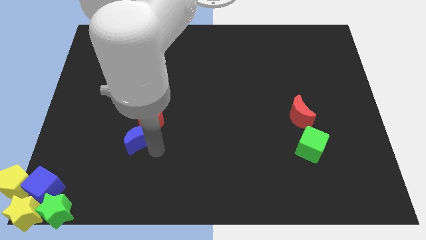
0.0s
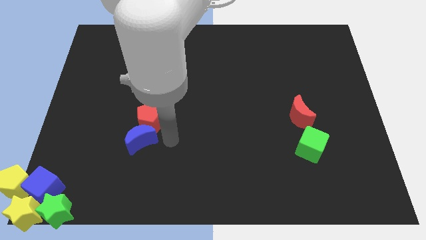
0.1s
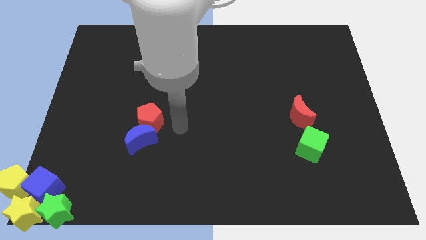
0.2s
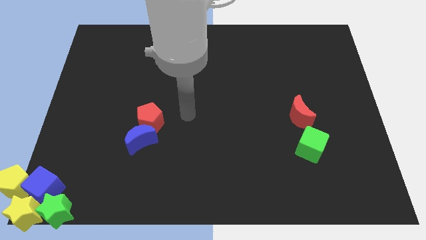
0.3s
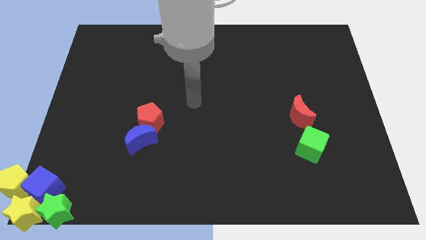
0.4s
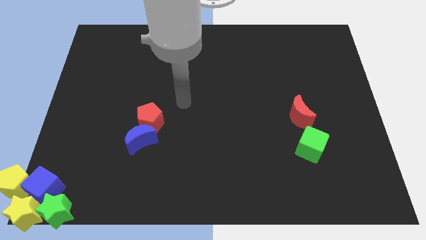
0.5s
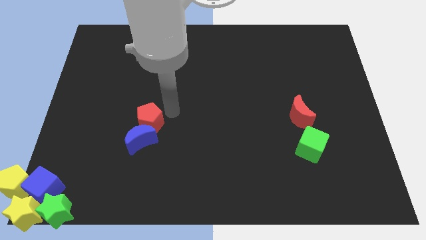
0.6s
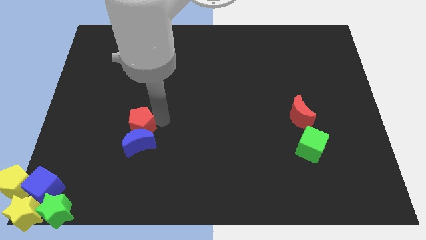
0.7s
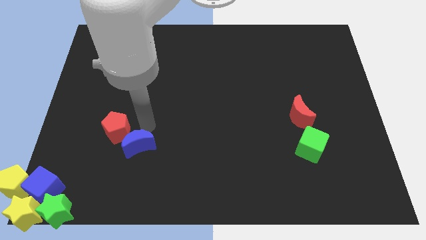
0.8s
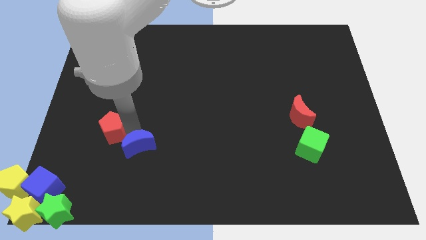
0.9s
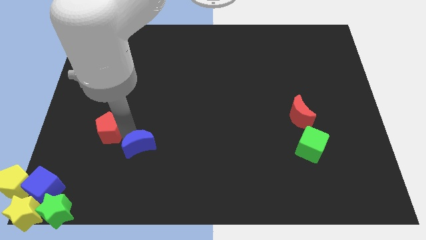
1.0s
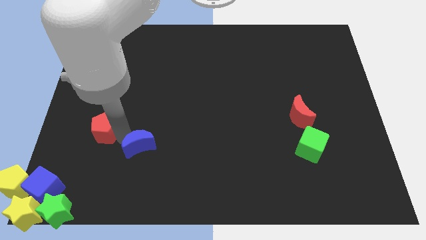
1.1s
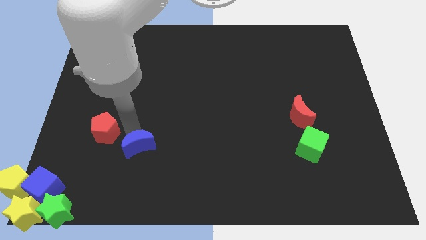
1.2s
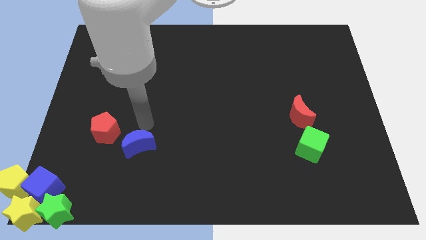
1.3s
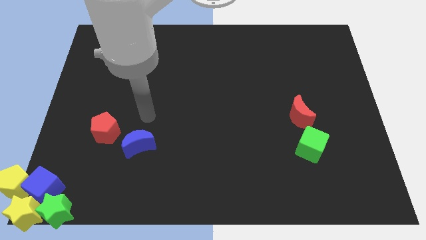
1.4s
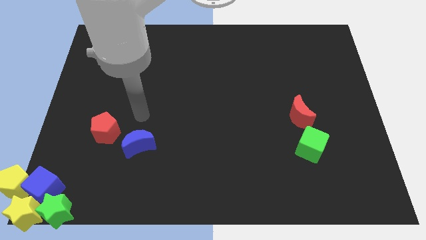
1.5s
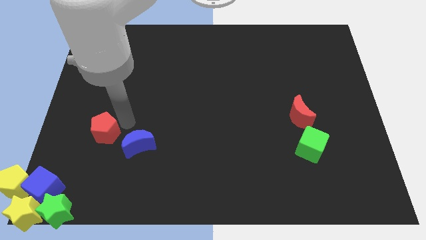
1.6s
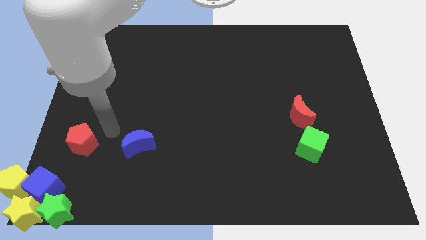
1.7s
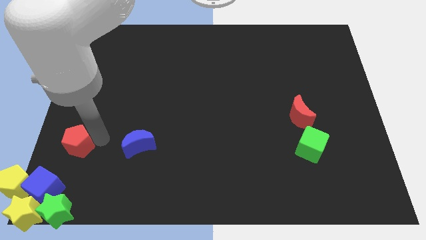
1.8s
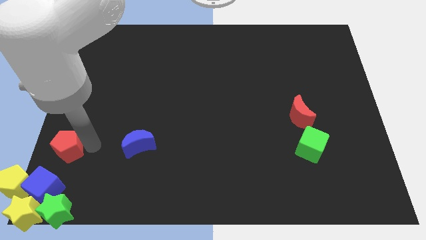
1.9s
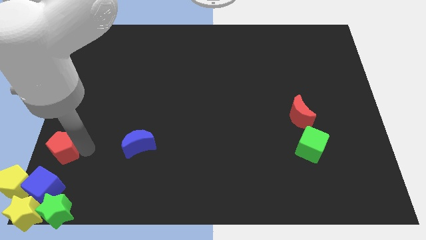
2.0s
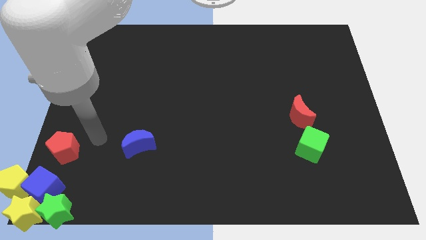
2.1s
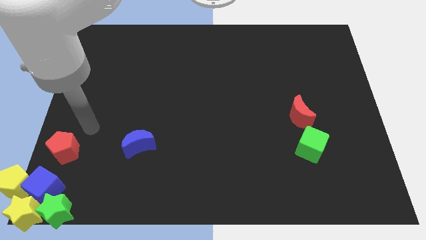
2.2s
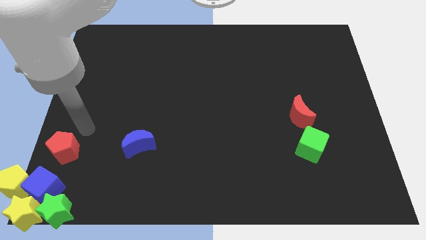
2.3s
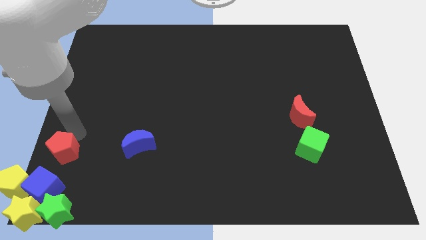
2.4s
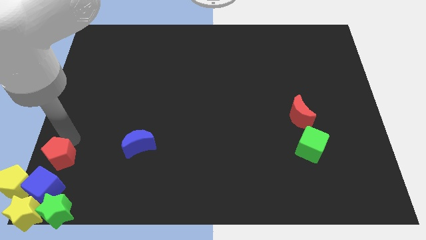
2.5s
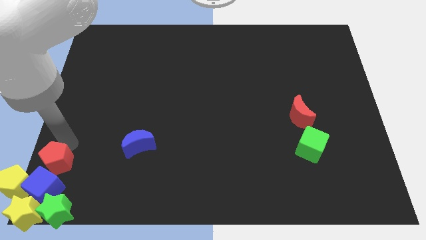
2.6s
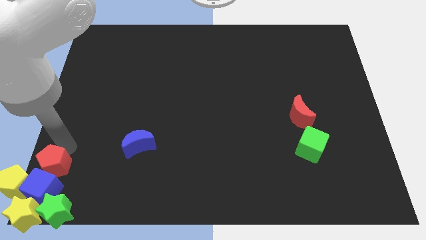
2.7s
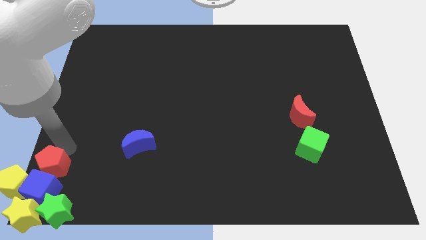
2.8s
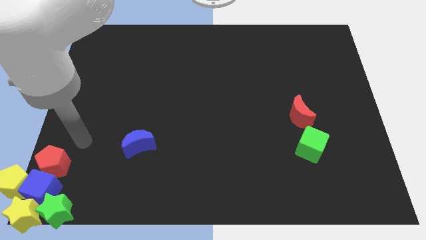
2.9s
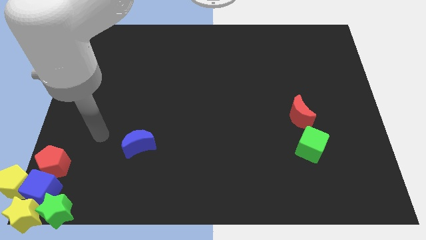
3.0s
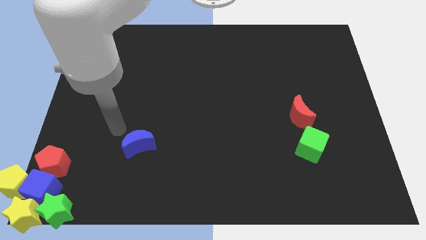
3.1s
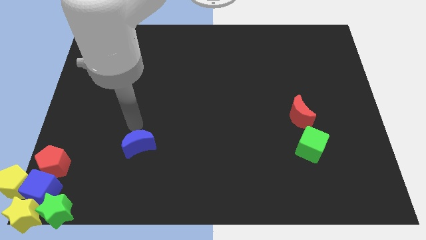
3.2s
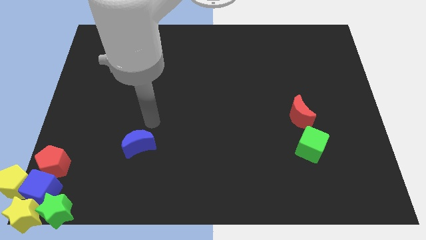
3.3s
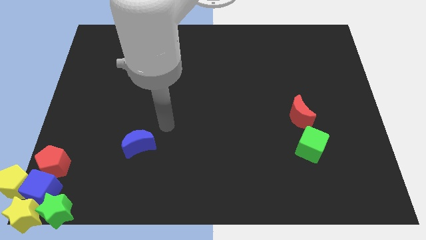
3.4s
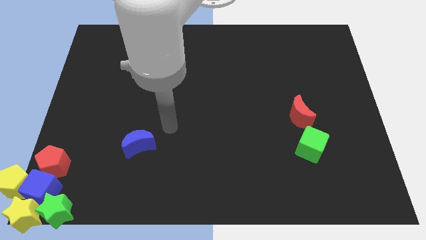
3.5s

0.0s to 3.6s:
slide red pentagon at the top of the blue cube

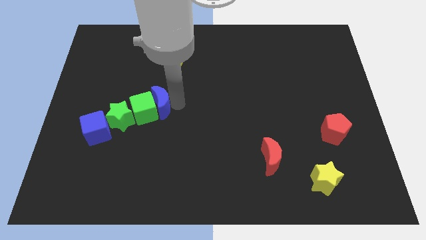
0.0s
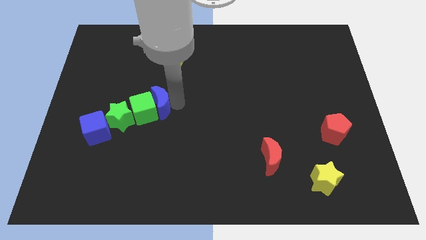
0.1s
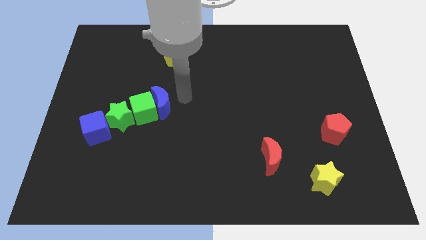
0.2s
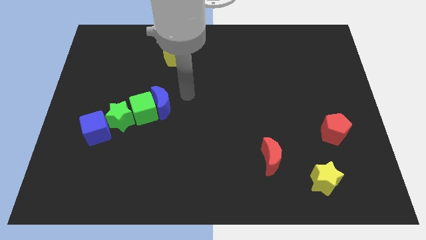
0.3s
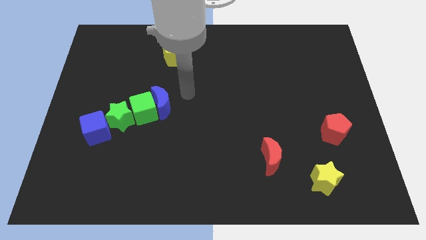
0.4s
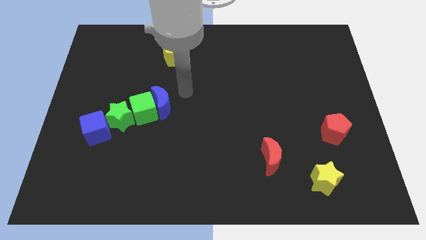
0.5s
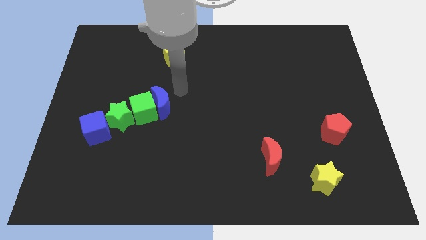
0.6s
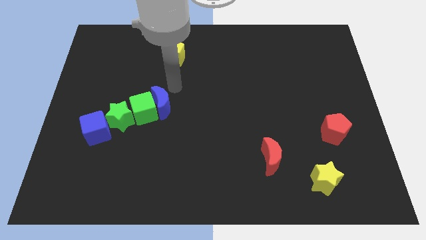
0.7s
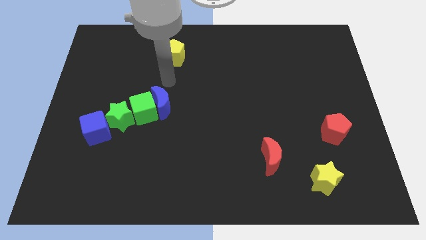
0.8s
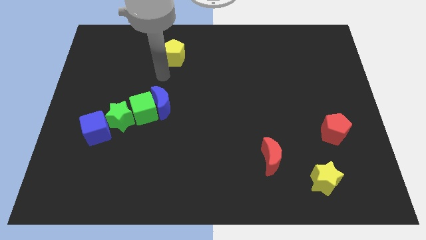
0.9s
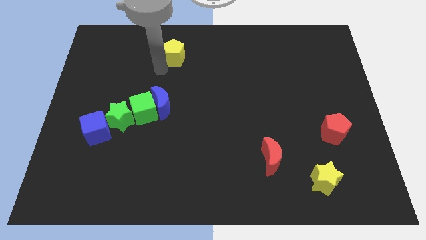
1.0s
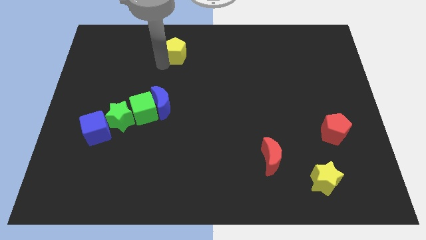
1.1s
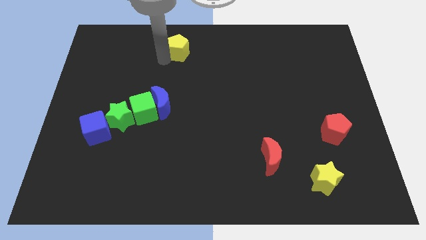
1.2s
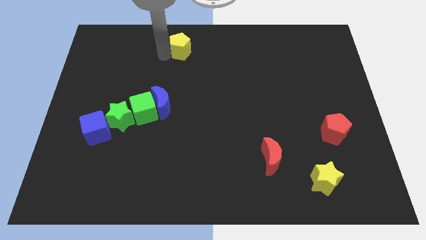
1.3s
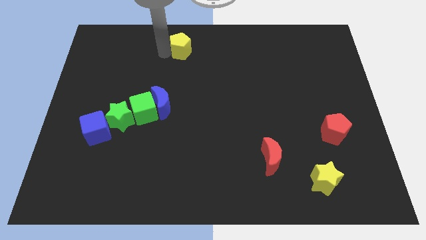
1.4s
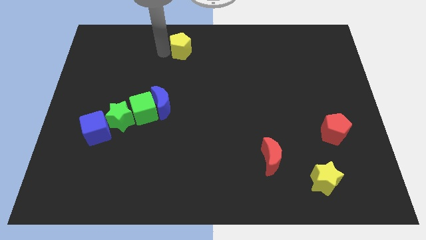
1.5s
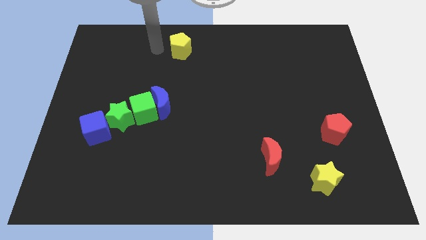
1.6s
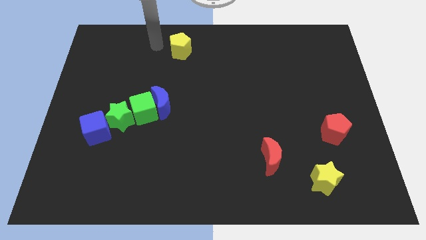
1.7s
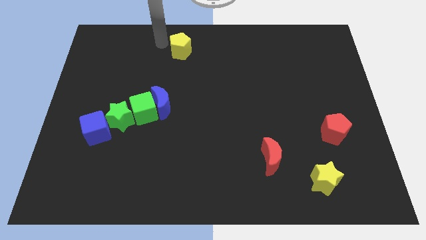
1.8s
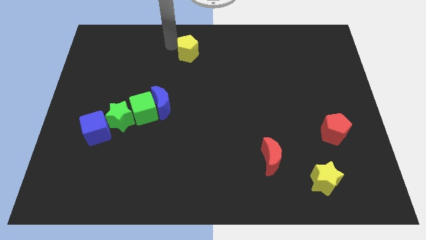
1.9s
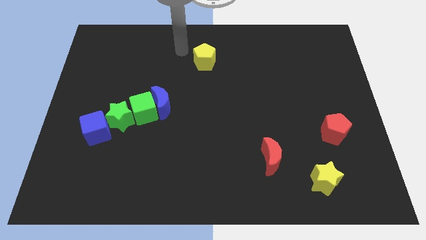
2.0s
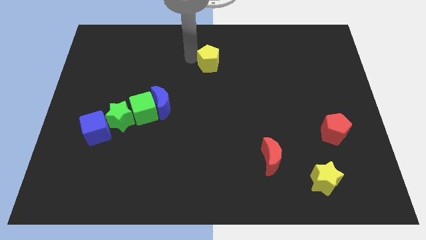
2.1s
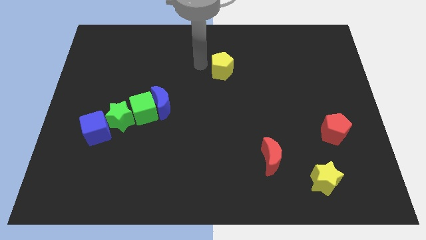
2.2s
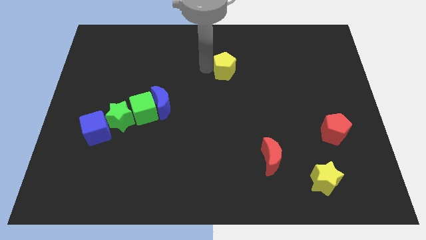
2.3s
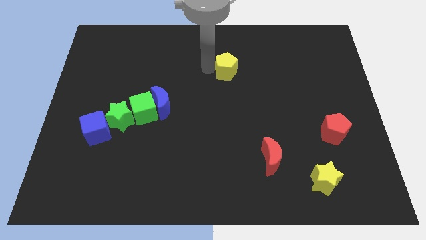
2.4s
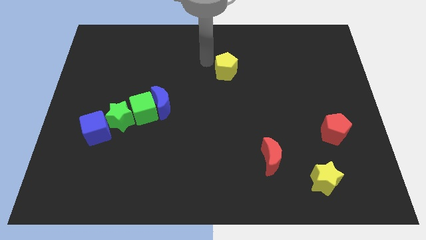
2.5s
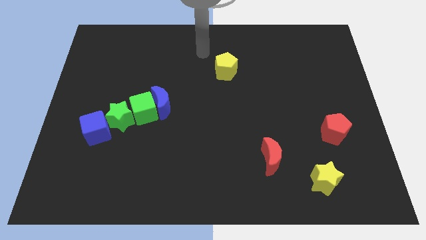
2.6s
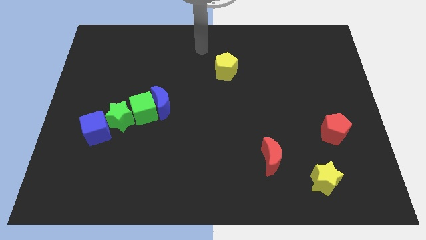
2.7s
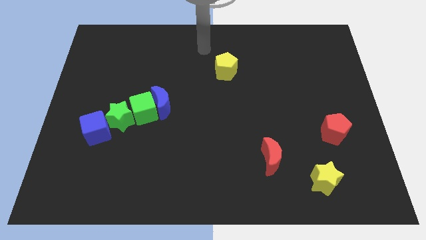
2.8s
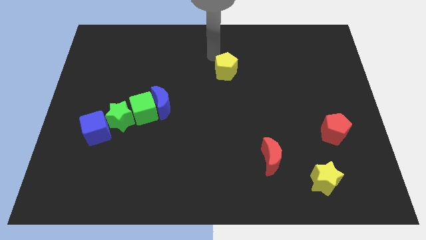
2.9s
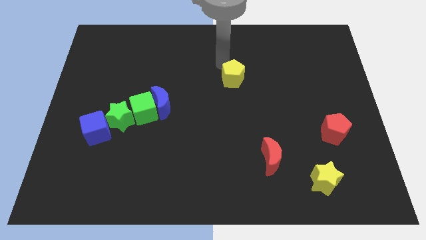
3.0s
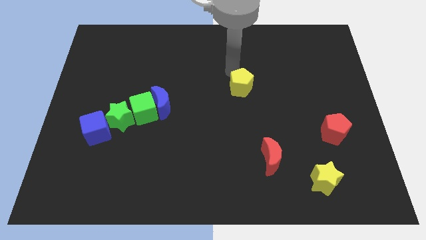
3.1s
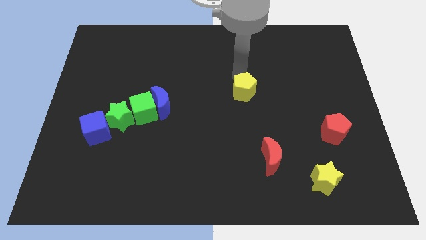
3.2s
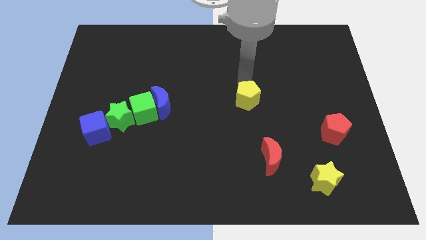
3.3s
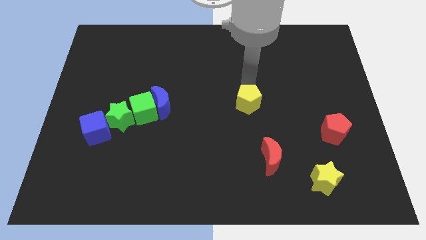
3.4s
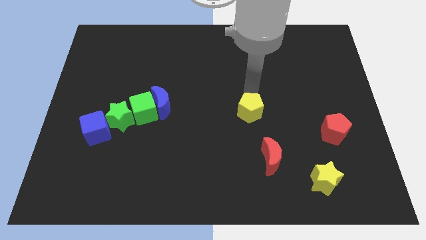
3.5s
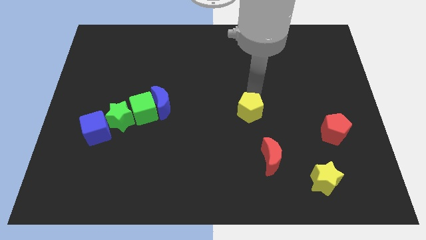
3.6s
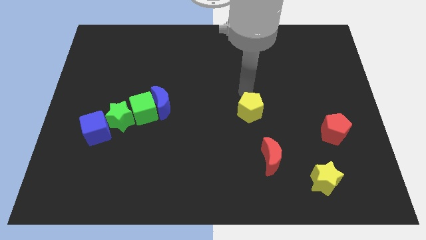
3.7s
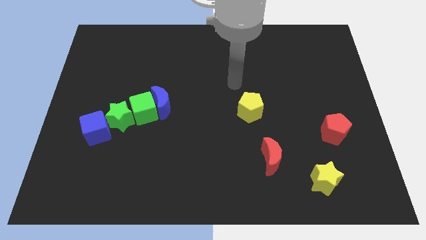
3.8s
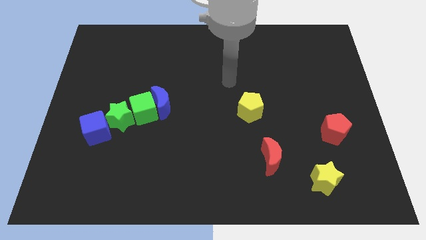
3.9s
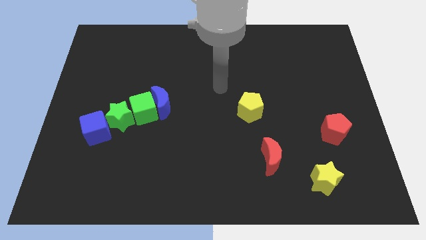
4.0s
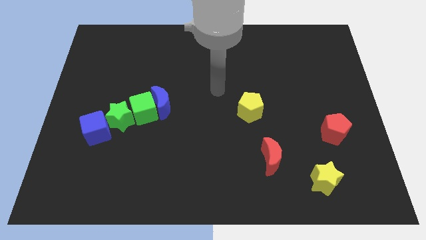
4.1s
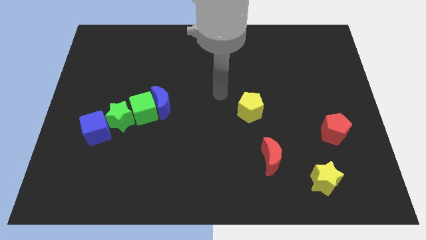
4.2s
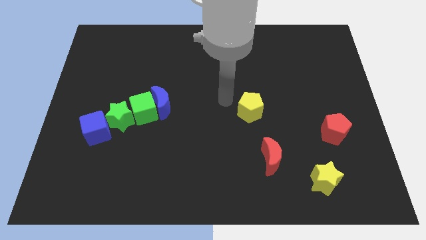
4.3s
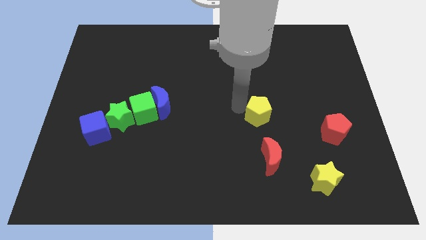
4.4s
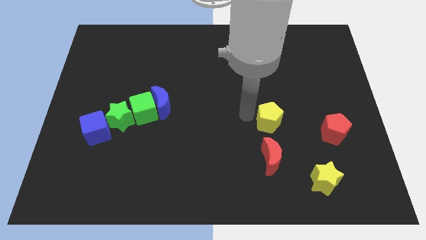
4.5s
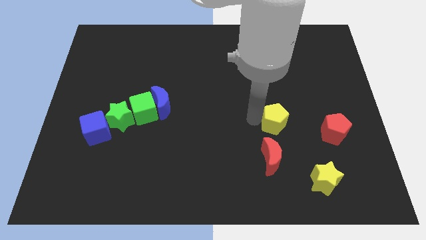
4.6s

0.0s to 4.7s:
place the yellow pentagon above the red crescent

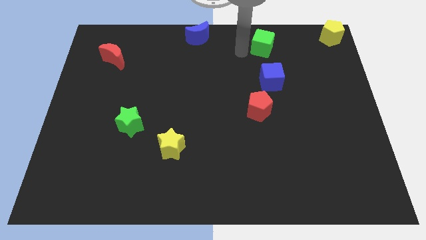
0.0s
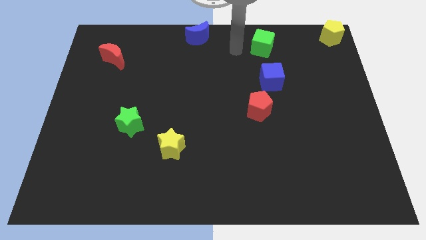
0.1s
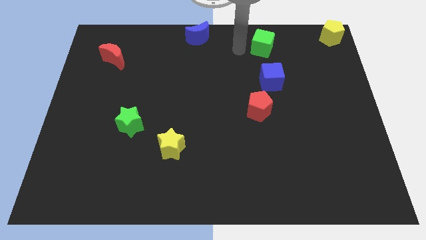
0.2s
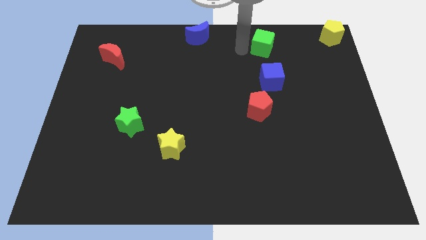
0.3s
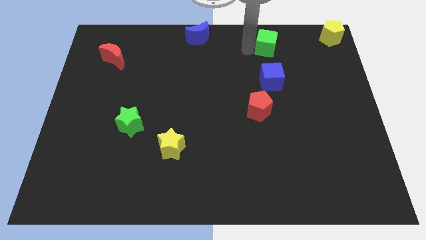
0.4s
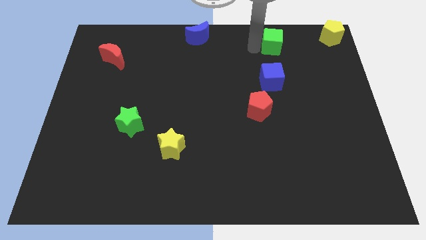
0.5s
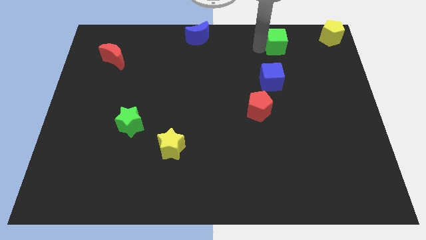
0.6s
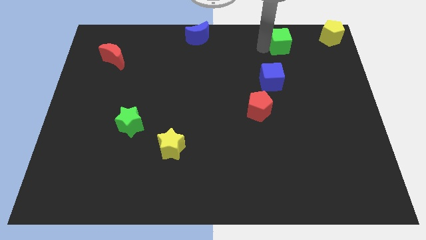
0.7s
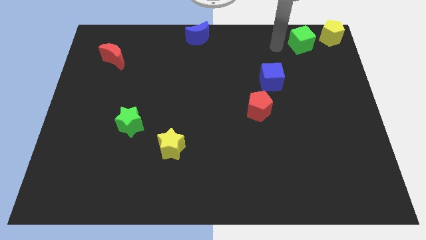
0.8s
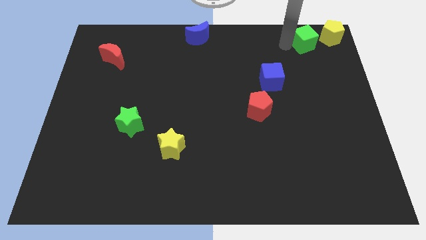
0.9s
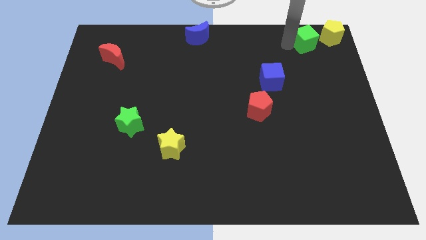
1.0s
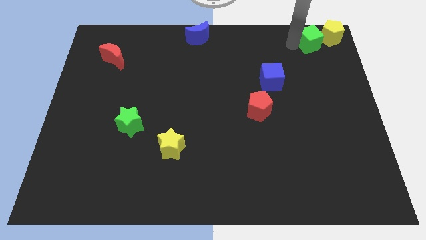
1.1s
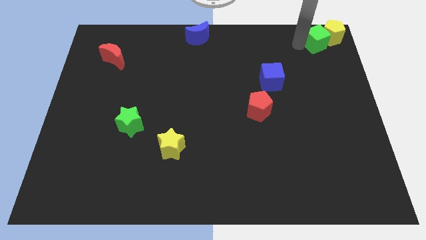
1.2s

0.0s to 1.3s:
push the green cube into yellow pentagon
